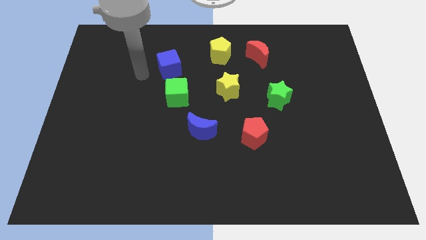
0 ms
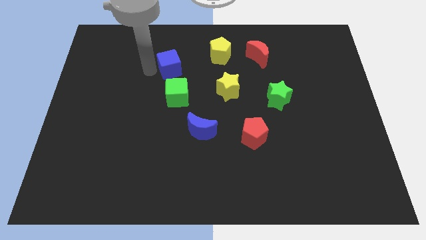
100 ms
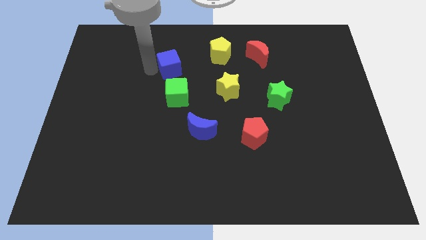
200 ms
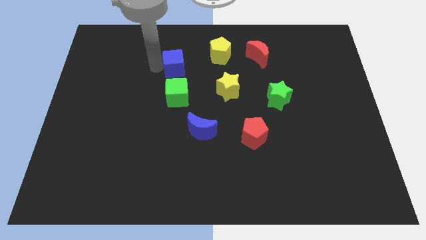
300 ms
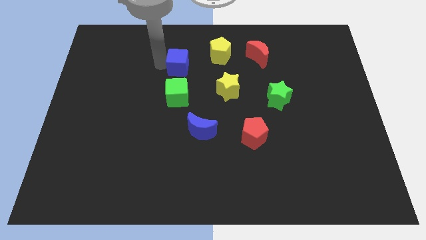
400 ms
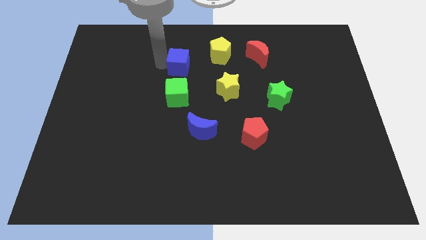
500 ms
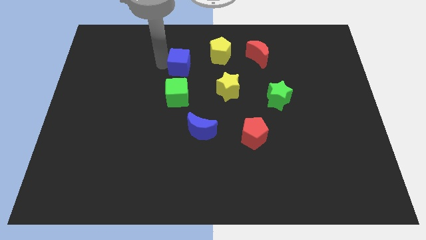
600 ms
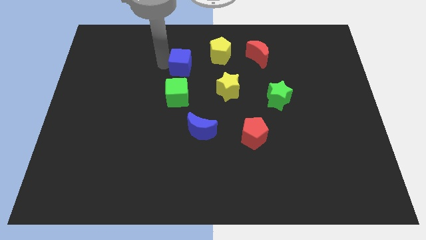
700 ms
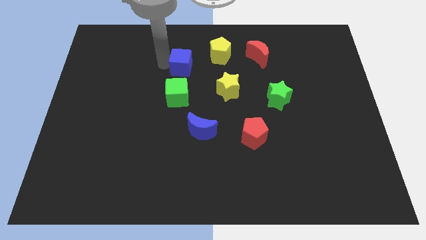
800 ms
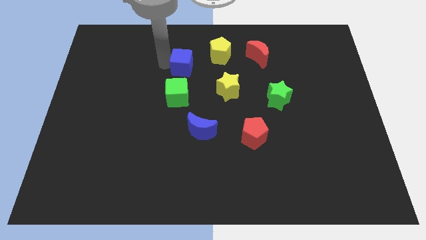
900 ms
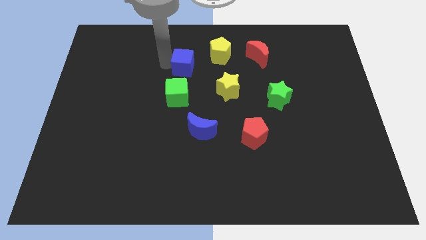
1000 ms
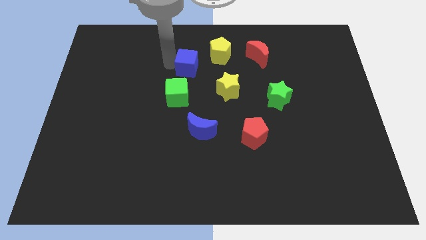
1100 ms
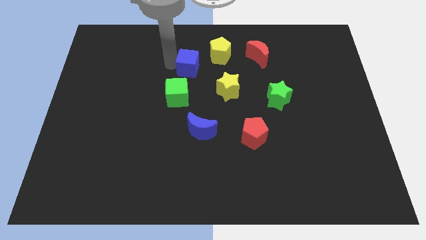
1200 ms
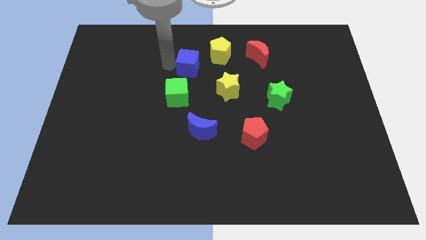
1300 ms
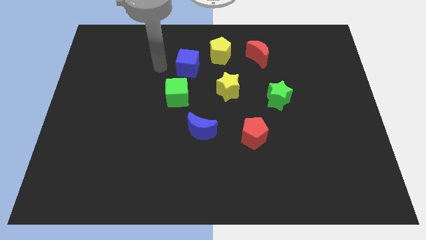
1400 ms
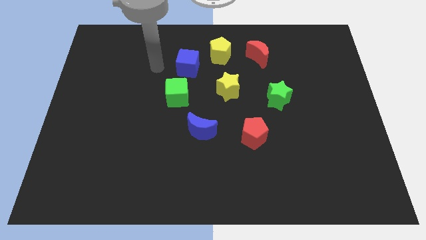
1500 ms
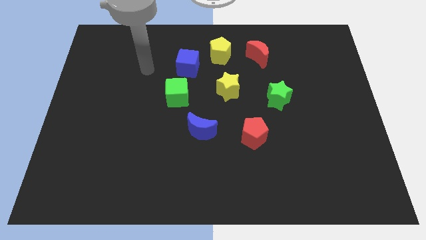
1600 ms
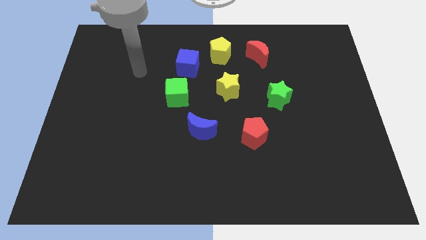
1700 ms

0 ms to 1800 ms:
slightly push blue cube towards right side of the board

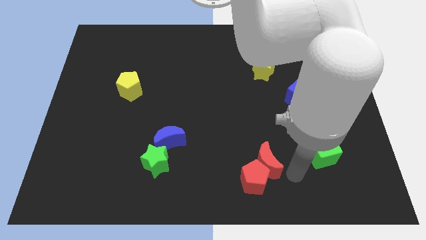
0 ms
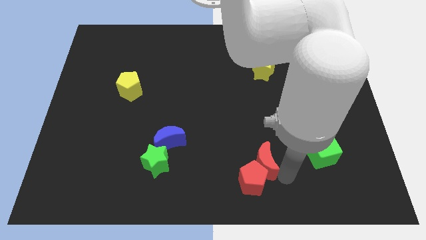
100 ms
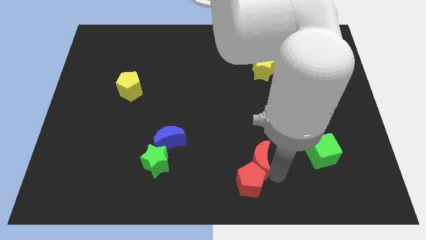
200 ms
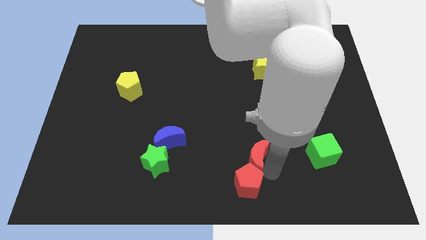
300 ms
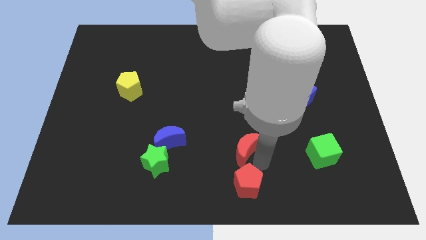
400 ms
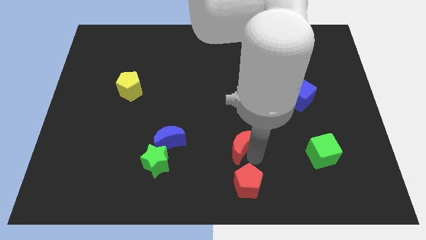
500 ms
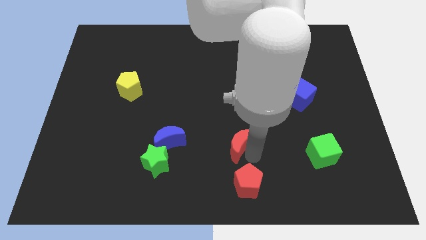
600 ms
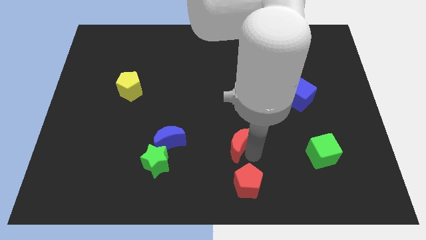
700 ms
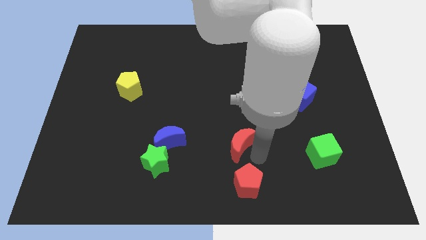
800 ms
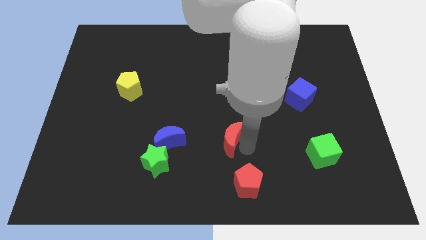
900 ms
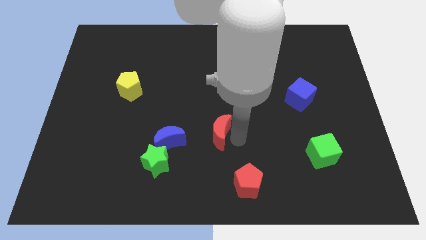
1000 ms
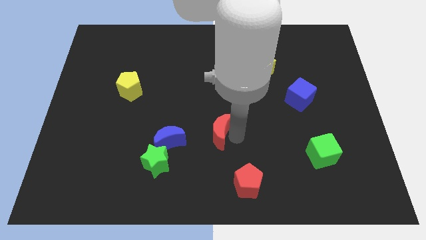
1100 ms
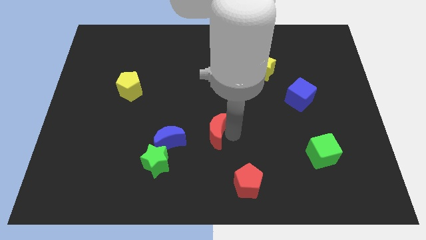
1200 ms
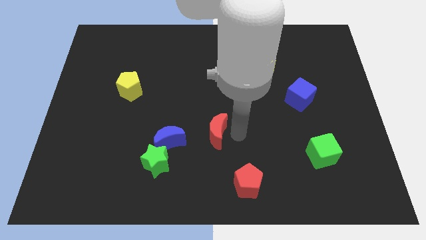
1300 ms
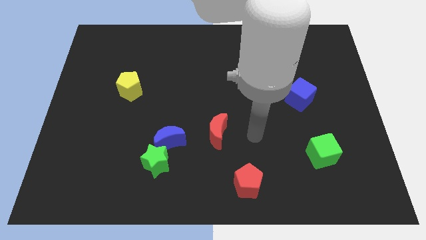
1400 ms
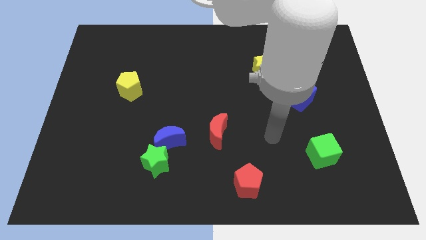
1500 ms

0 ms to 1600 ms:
move the red crescent to the center of the board

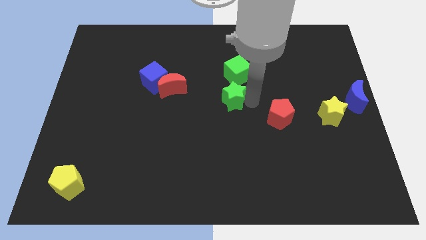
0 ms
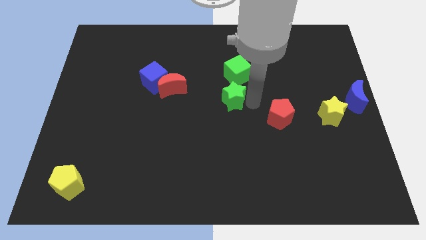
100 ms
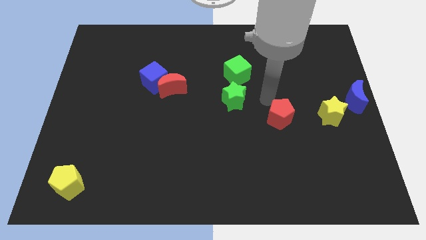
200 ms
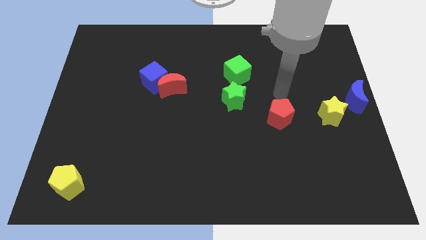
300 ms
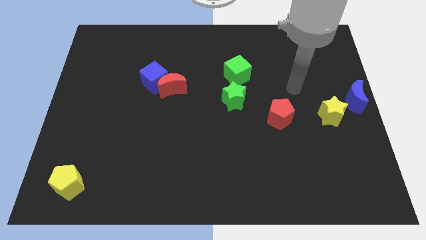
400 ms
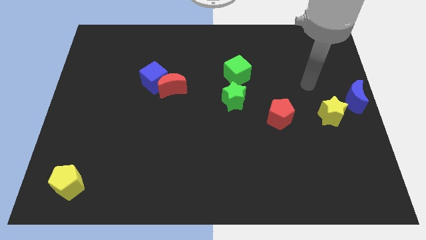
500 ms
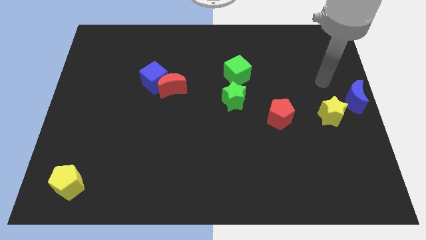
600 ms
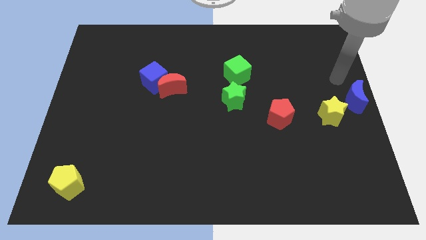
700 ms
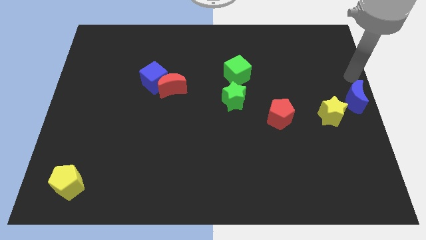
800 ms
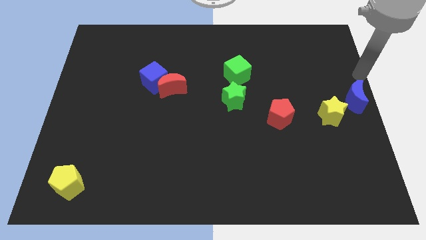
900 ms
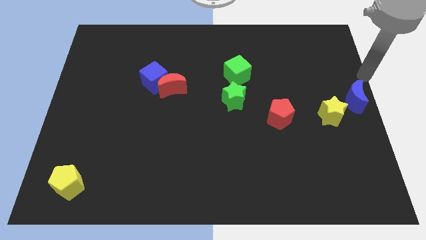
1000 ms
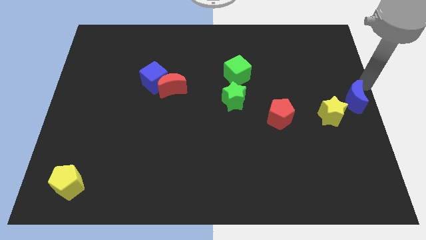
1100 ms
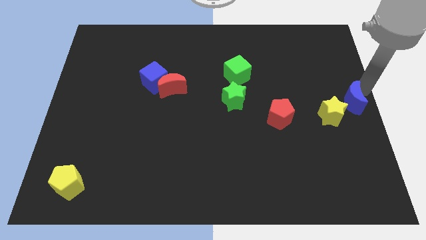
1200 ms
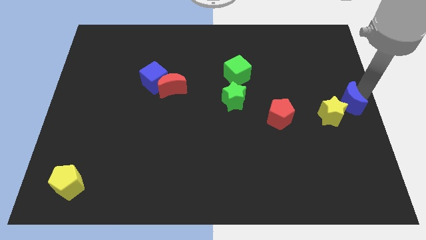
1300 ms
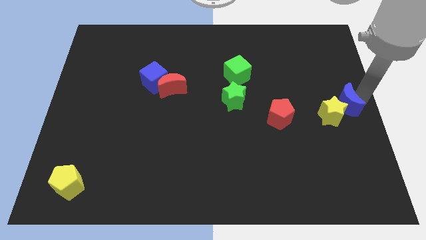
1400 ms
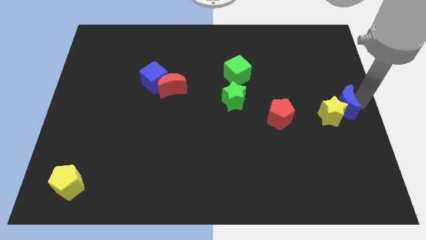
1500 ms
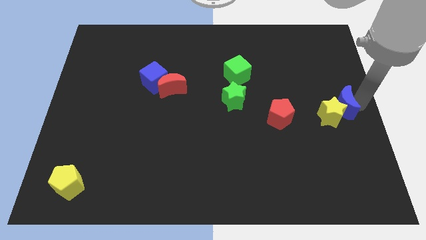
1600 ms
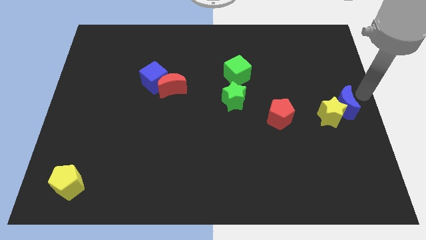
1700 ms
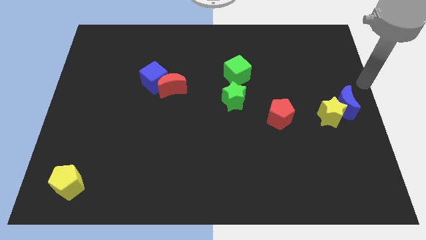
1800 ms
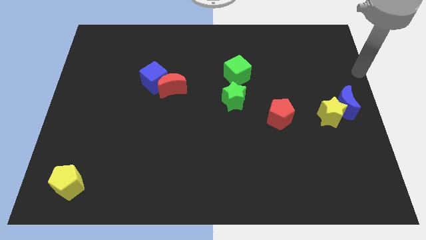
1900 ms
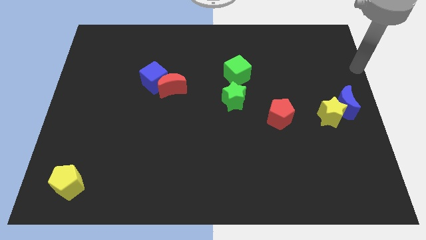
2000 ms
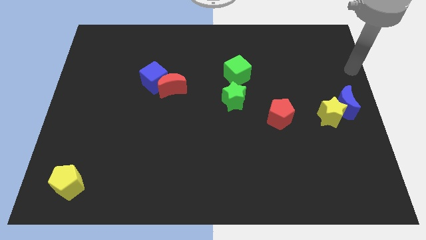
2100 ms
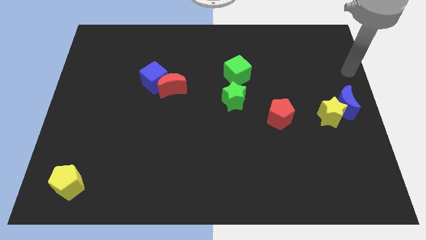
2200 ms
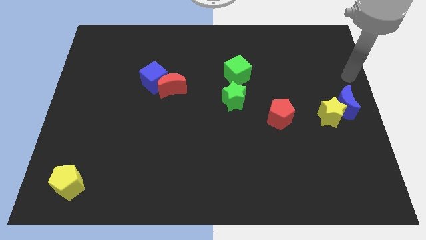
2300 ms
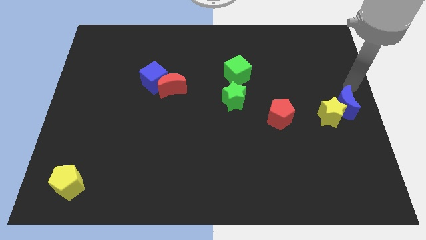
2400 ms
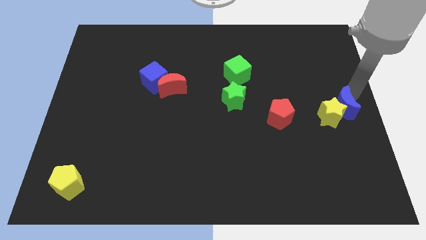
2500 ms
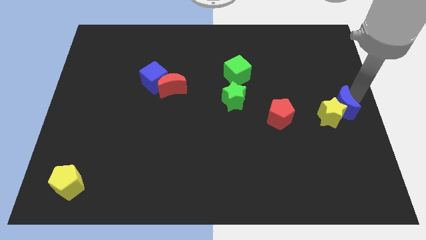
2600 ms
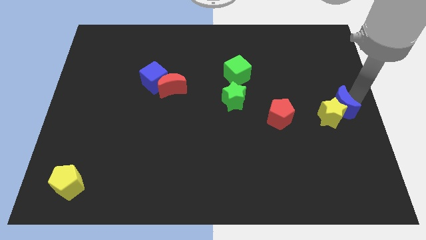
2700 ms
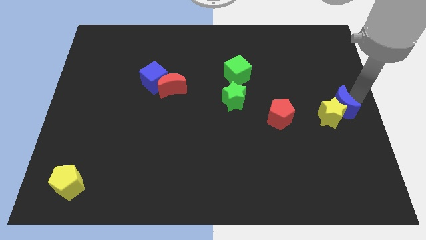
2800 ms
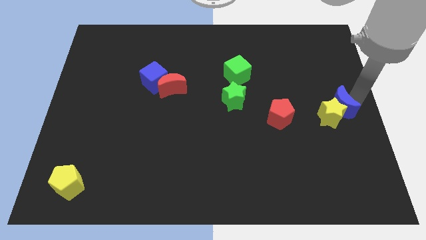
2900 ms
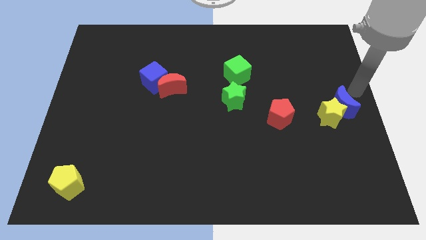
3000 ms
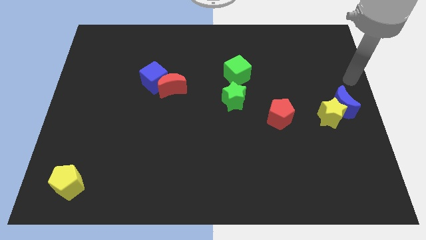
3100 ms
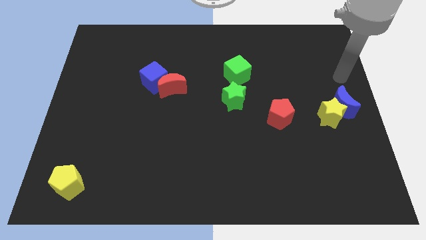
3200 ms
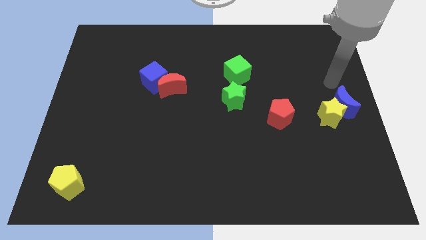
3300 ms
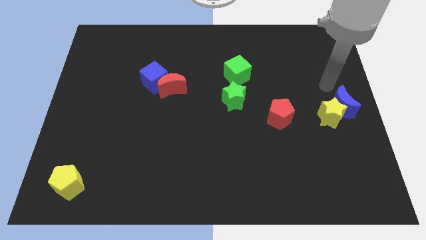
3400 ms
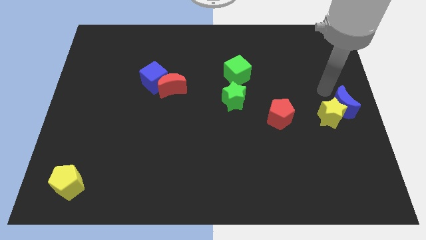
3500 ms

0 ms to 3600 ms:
place blue crescent to the top right of yellow star

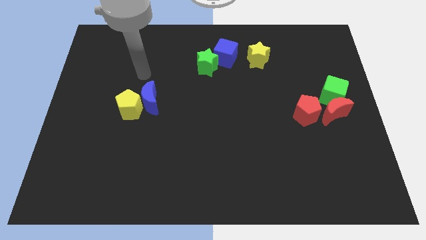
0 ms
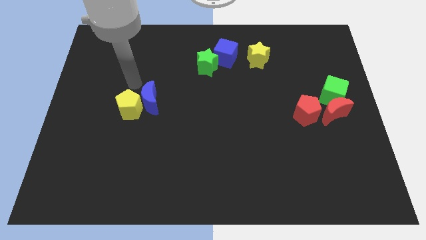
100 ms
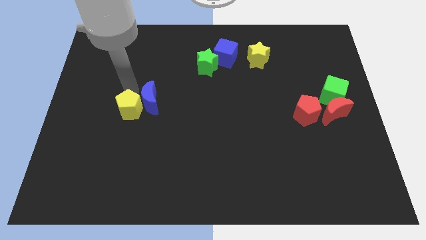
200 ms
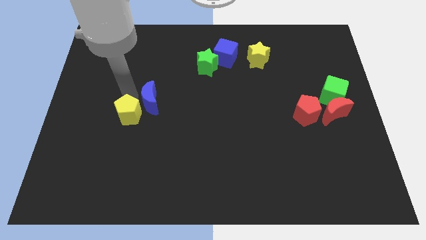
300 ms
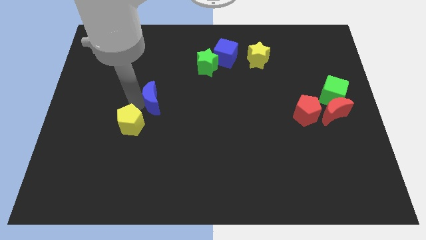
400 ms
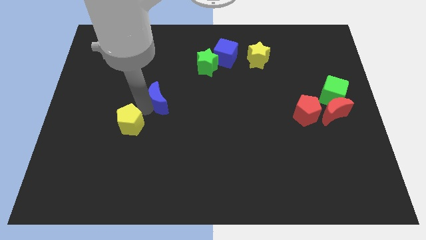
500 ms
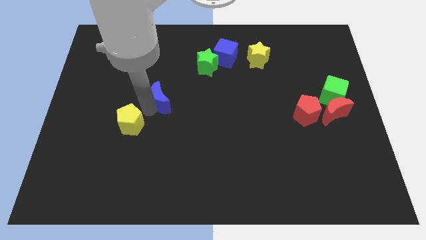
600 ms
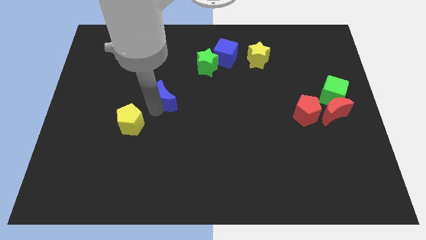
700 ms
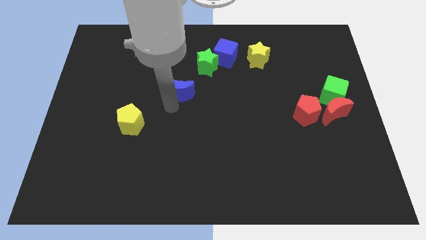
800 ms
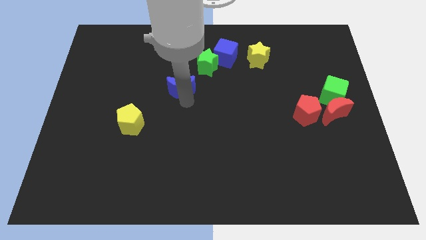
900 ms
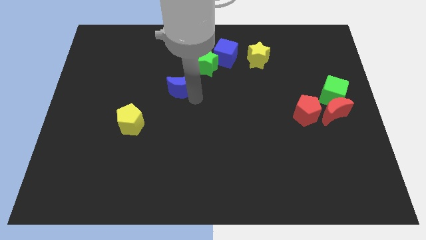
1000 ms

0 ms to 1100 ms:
separate blue moon and yellow pentagon

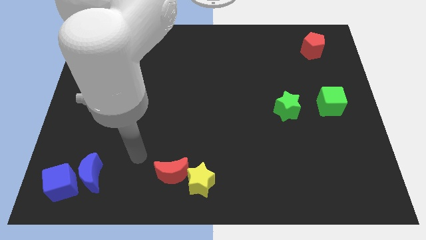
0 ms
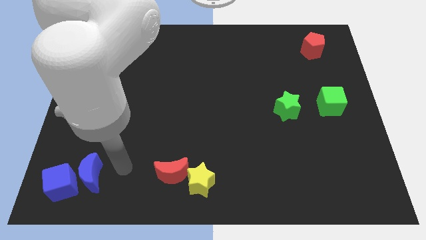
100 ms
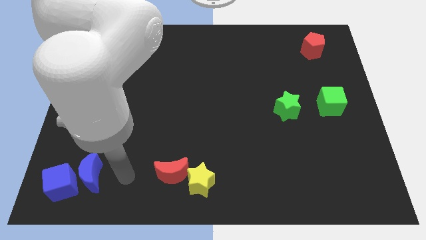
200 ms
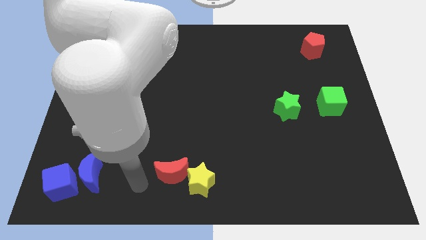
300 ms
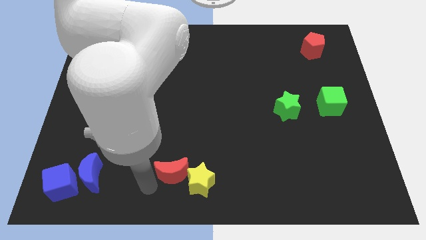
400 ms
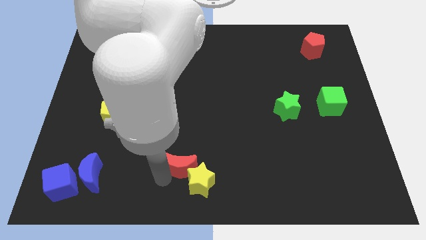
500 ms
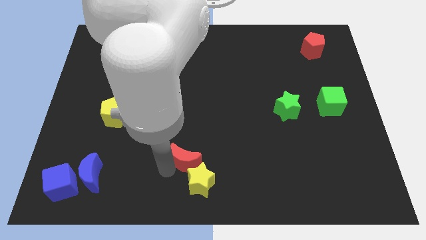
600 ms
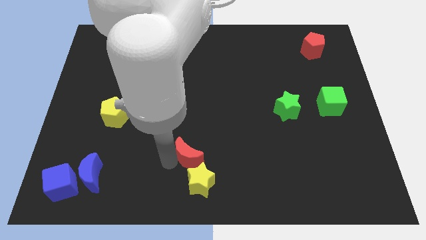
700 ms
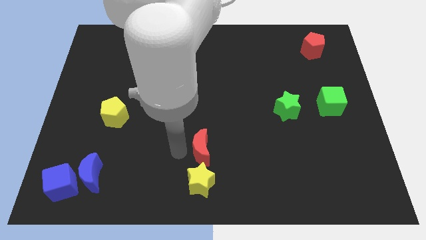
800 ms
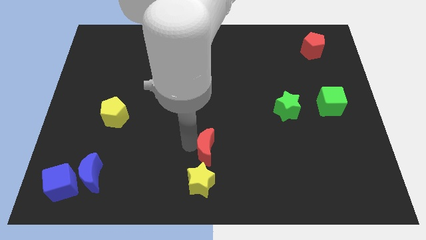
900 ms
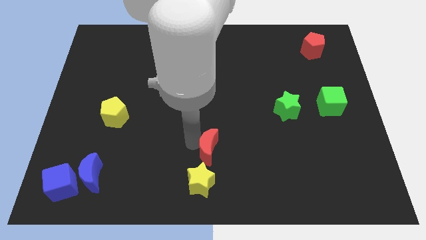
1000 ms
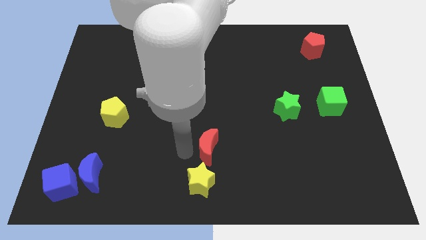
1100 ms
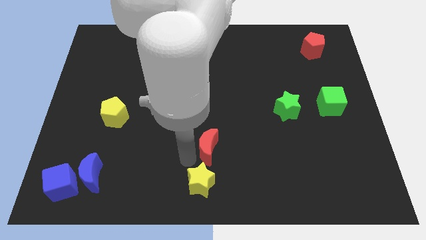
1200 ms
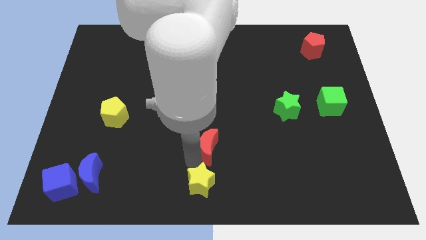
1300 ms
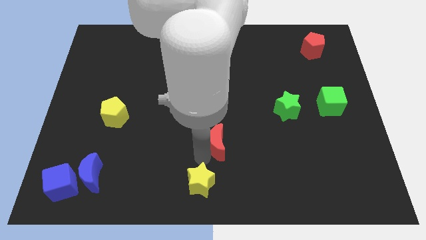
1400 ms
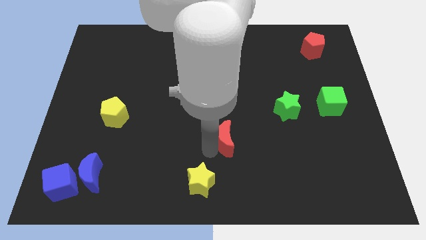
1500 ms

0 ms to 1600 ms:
separate the red moon from the yellow star
